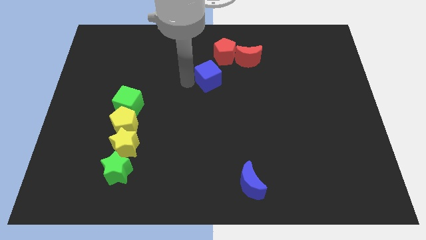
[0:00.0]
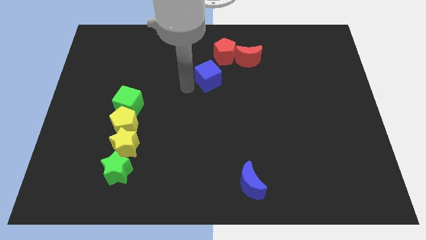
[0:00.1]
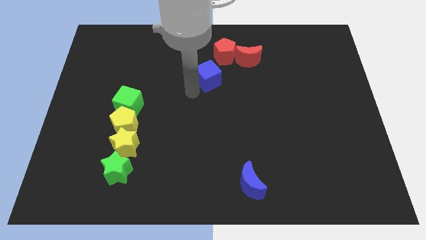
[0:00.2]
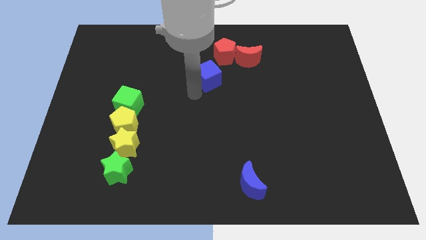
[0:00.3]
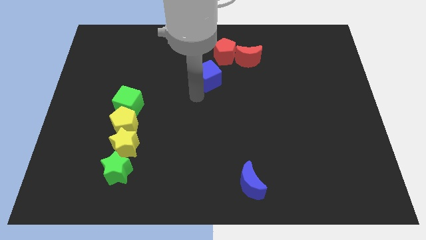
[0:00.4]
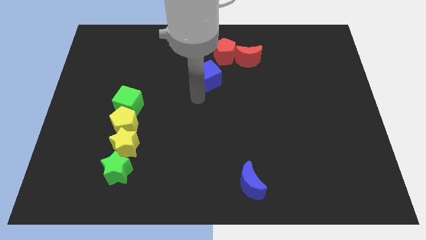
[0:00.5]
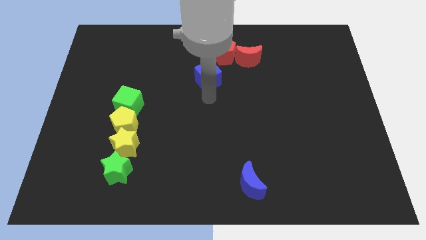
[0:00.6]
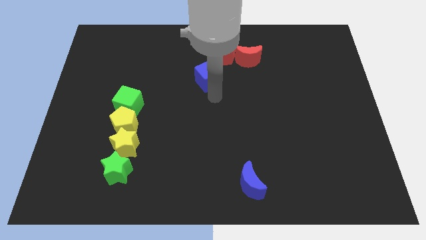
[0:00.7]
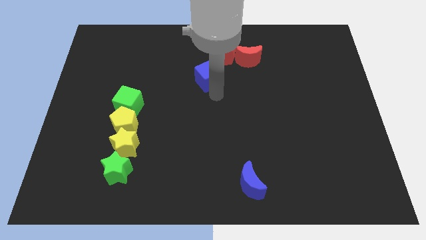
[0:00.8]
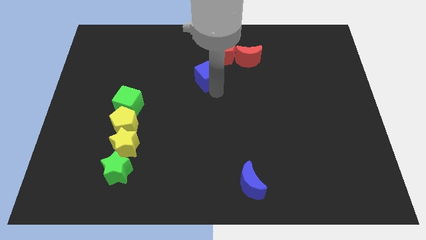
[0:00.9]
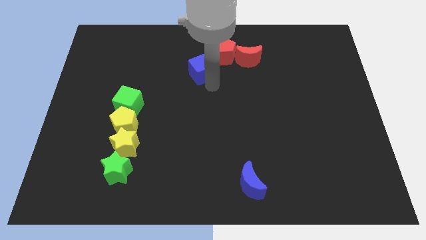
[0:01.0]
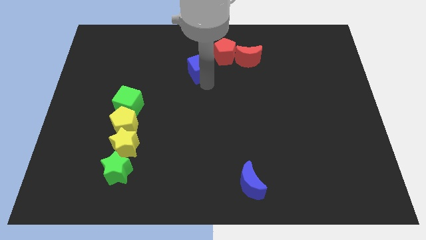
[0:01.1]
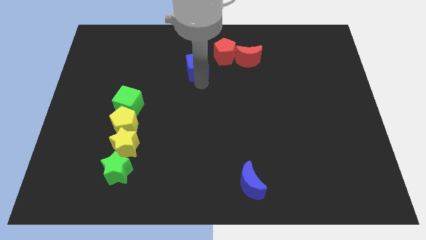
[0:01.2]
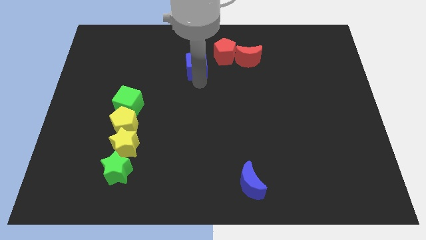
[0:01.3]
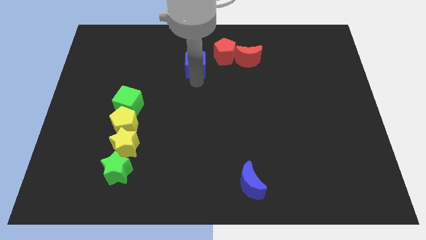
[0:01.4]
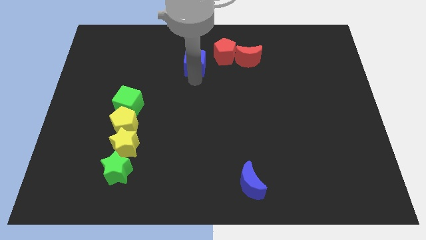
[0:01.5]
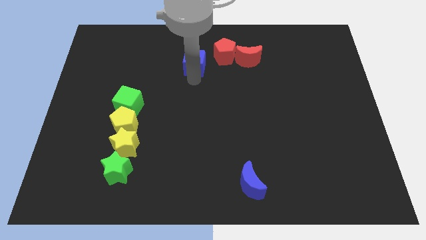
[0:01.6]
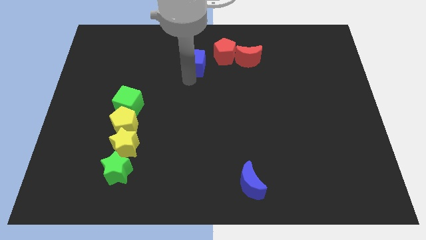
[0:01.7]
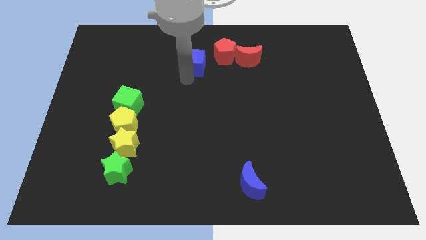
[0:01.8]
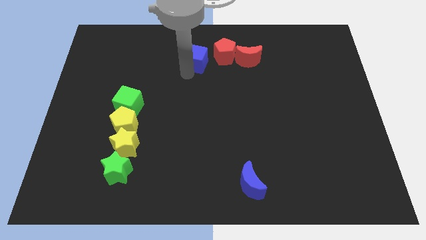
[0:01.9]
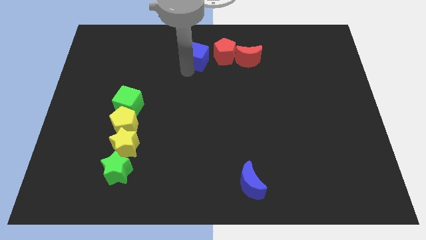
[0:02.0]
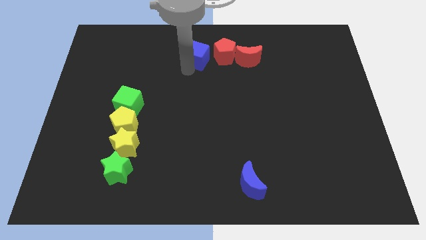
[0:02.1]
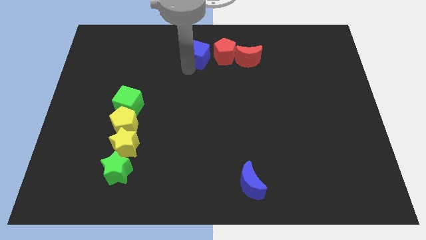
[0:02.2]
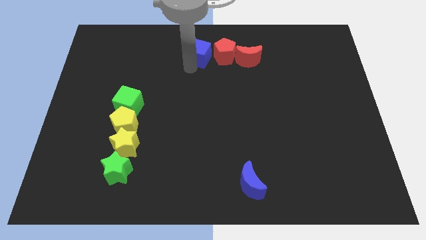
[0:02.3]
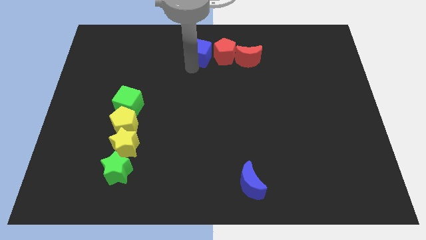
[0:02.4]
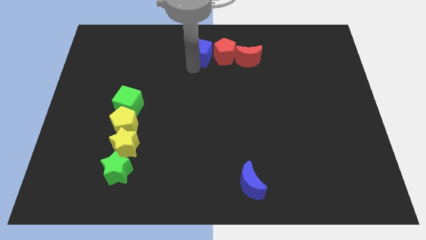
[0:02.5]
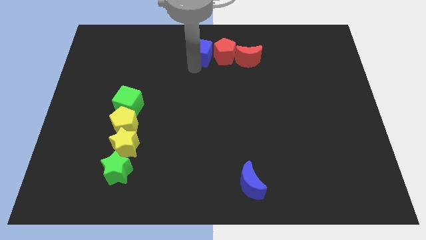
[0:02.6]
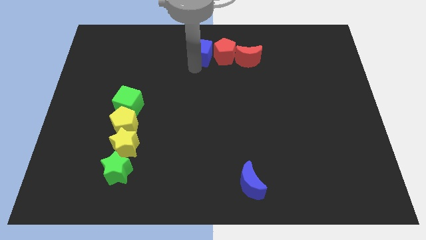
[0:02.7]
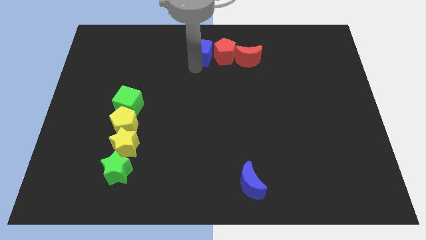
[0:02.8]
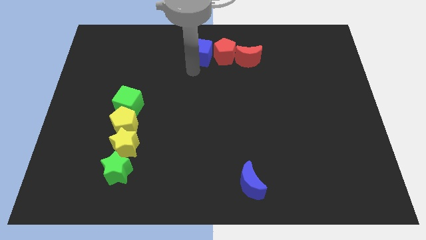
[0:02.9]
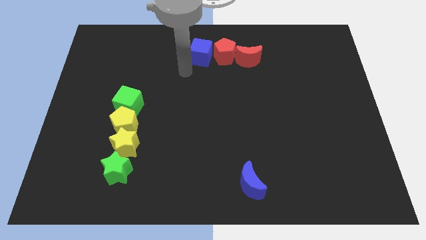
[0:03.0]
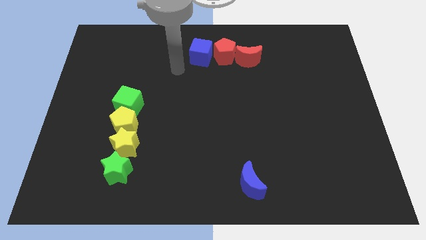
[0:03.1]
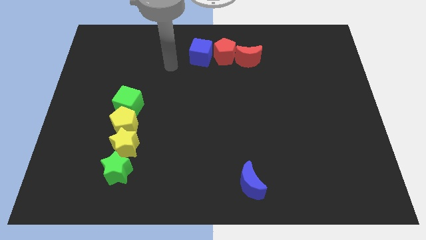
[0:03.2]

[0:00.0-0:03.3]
move the blue cube to the left of the red pentagon

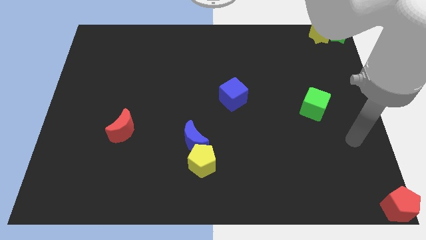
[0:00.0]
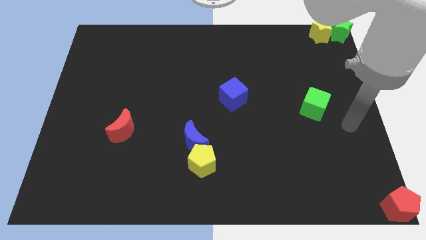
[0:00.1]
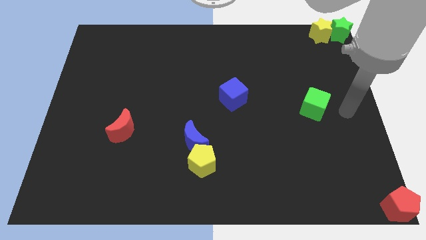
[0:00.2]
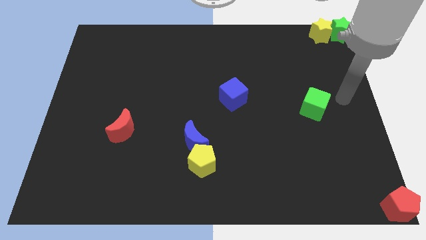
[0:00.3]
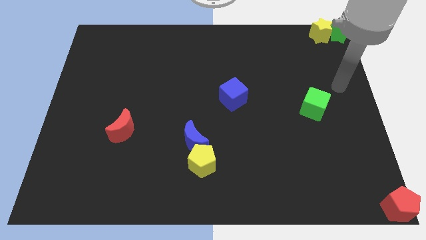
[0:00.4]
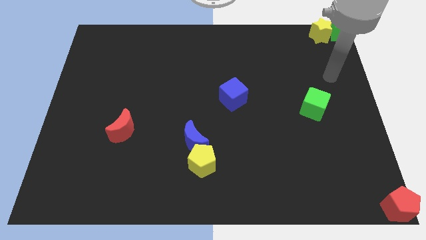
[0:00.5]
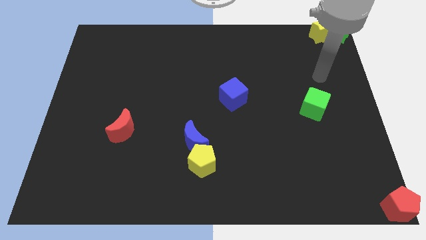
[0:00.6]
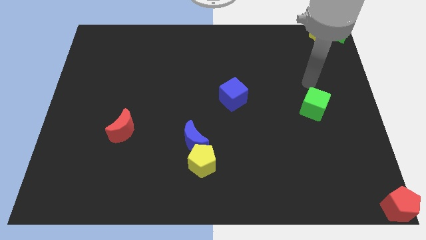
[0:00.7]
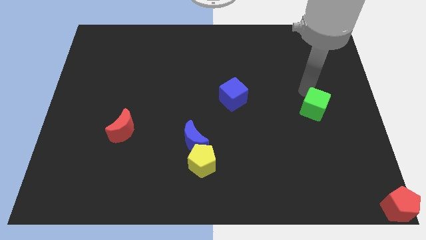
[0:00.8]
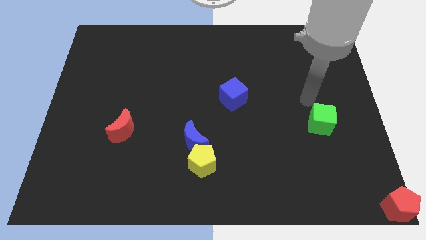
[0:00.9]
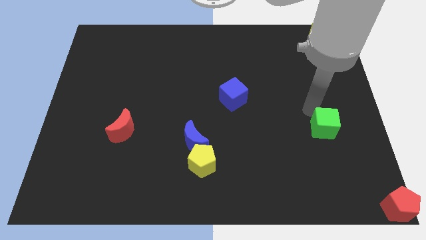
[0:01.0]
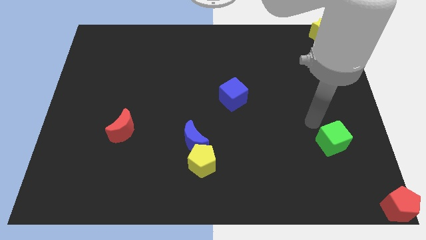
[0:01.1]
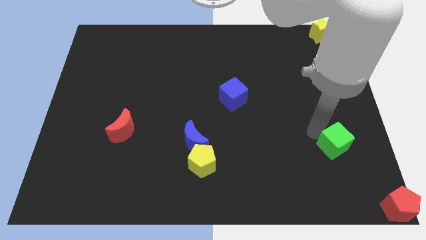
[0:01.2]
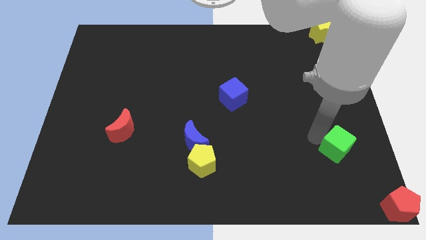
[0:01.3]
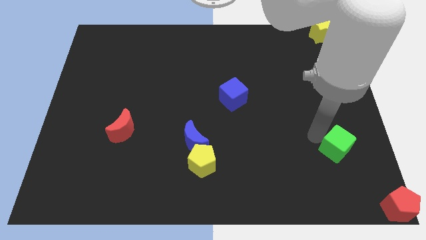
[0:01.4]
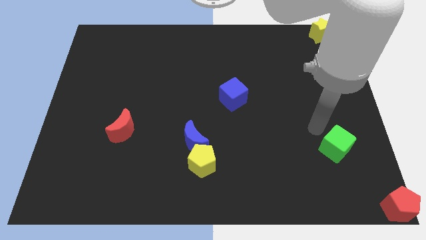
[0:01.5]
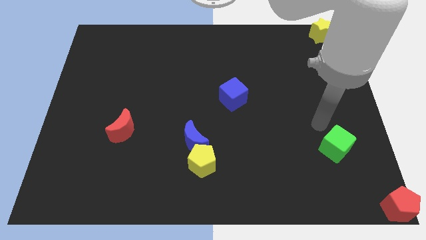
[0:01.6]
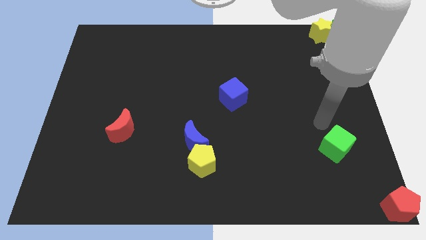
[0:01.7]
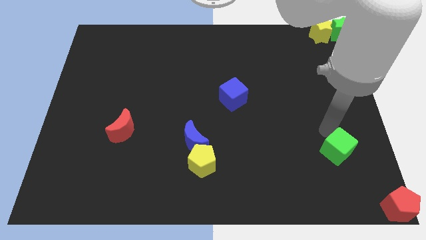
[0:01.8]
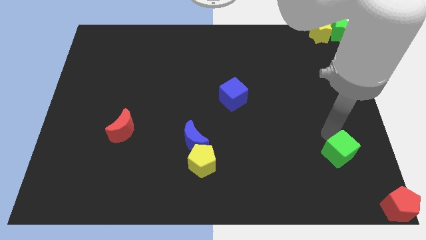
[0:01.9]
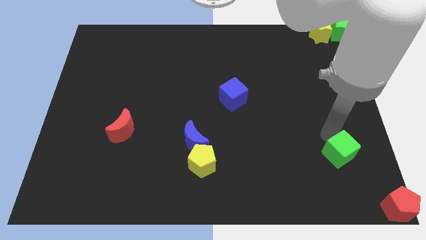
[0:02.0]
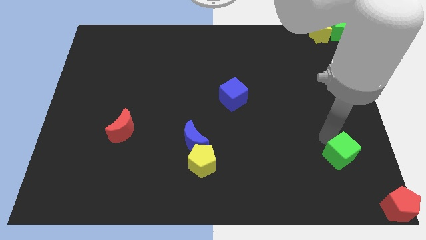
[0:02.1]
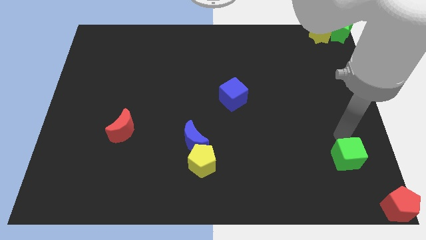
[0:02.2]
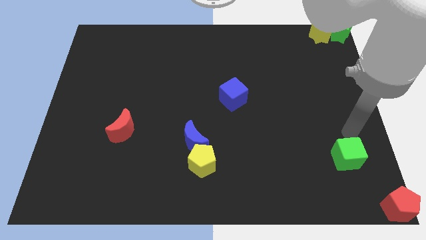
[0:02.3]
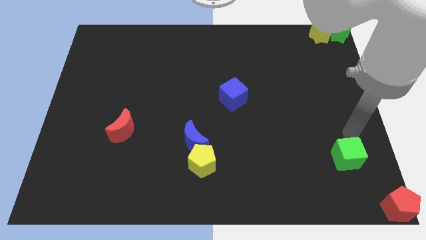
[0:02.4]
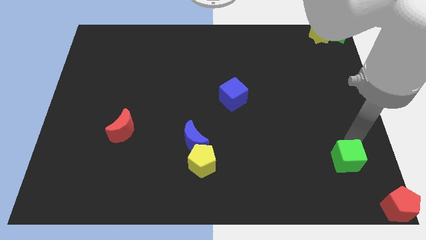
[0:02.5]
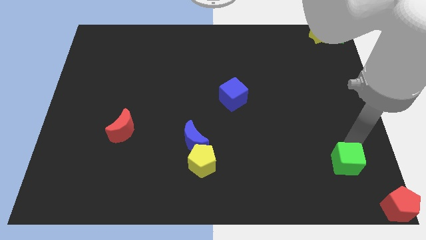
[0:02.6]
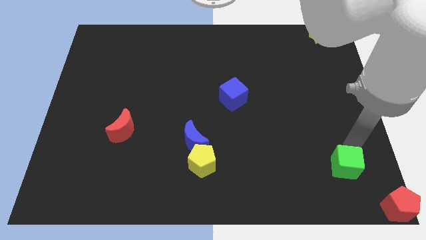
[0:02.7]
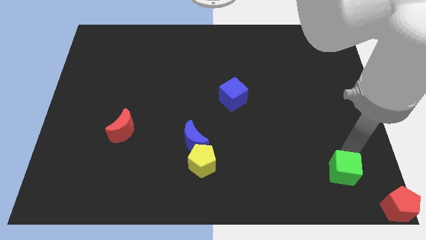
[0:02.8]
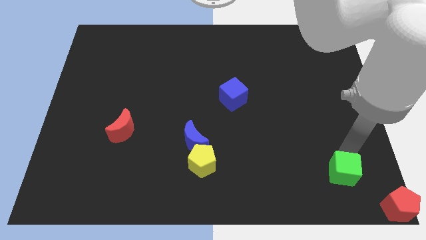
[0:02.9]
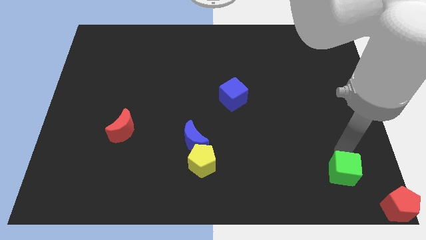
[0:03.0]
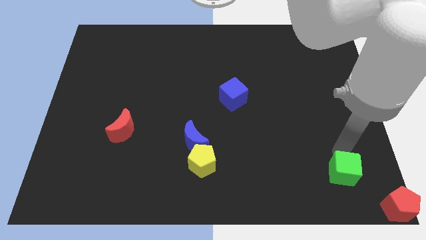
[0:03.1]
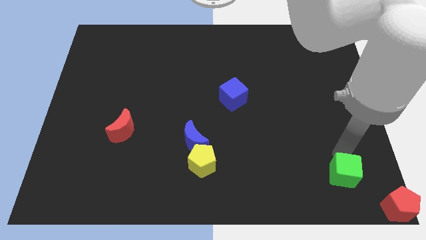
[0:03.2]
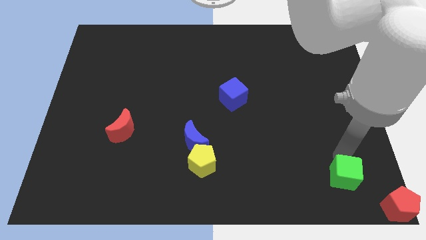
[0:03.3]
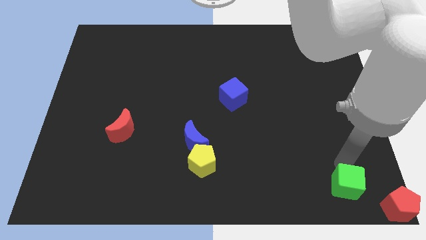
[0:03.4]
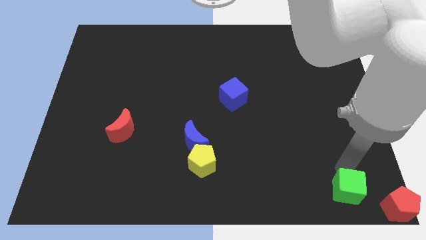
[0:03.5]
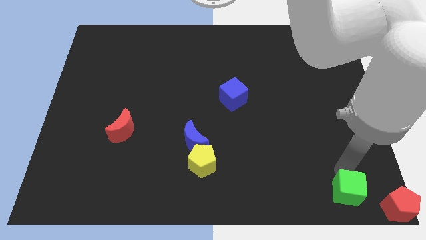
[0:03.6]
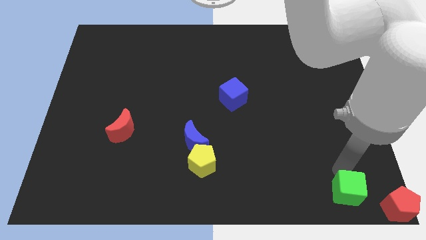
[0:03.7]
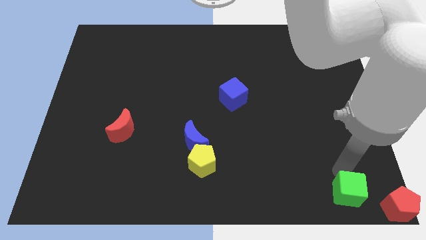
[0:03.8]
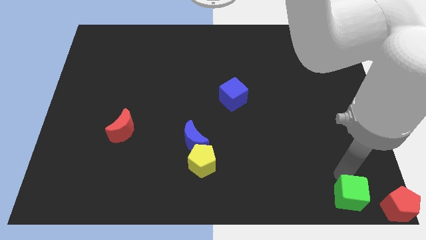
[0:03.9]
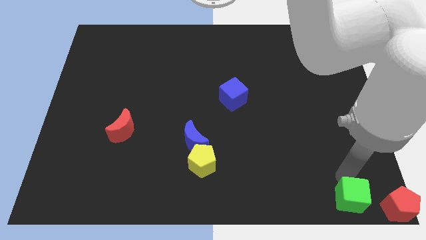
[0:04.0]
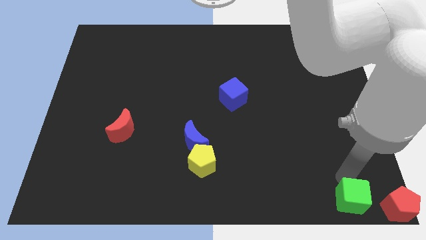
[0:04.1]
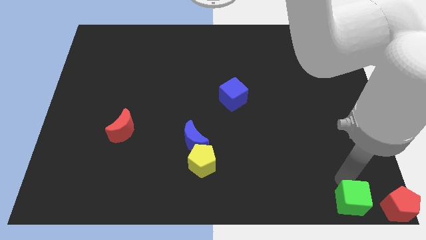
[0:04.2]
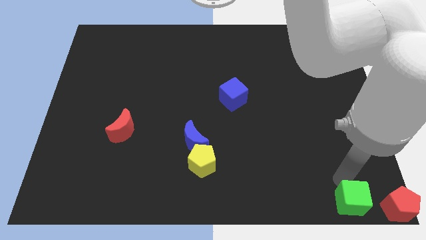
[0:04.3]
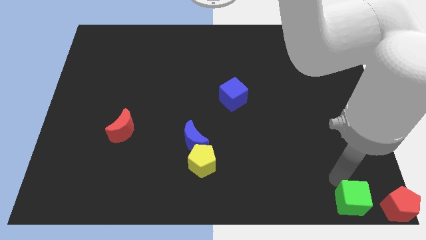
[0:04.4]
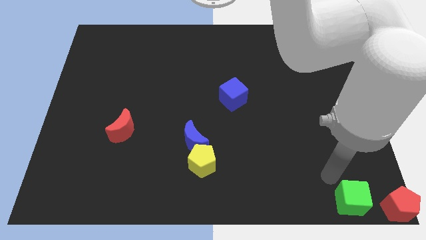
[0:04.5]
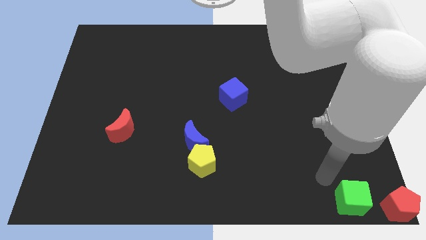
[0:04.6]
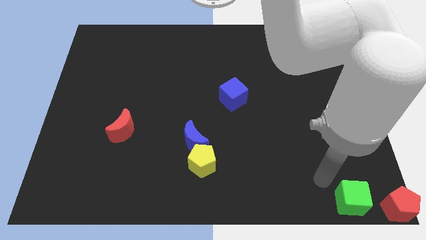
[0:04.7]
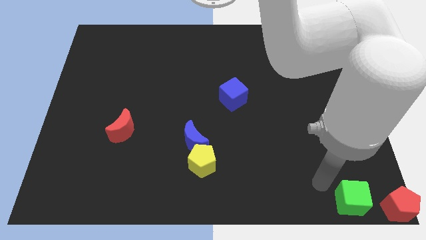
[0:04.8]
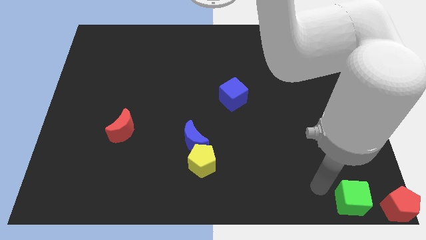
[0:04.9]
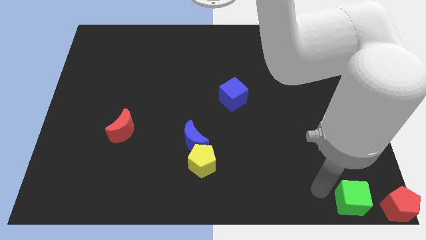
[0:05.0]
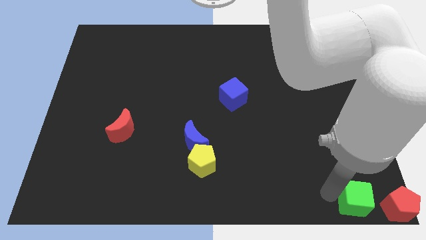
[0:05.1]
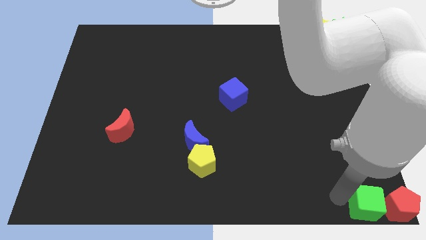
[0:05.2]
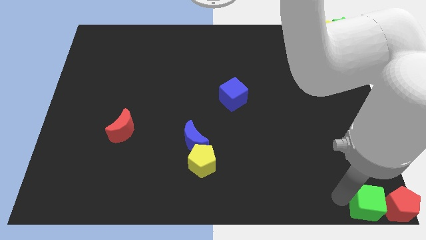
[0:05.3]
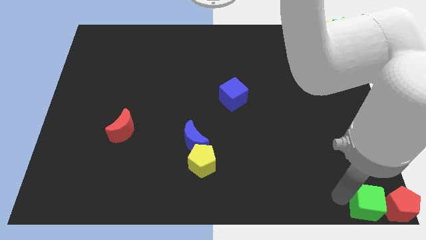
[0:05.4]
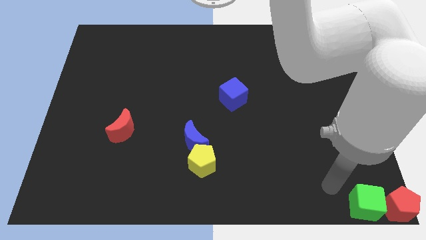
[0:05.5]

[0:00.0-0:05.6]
place the green cube left to the red pentagon
